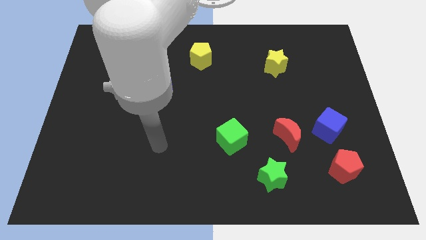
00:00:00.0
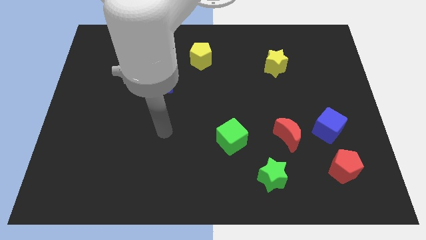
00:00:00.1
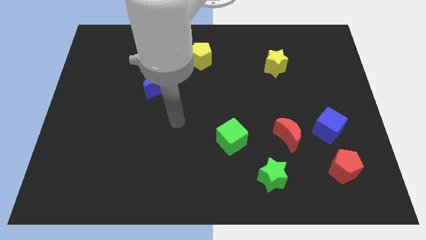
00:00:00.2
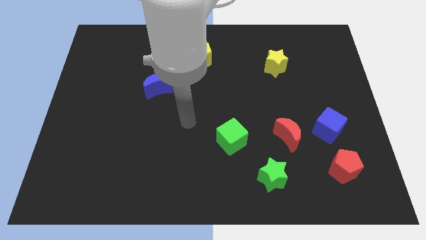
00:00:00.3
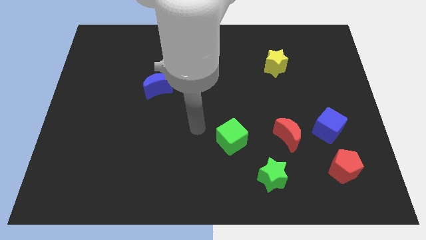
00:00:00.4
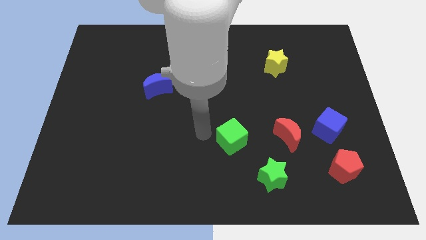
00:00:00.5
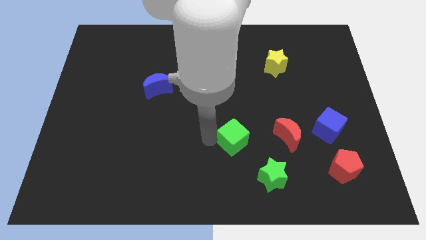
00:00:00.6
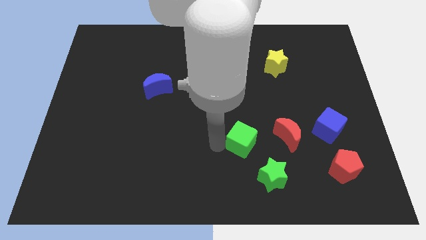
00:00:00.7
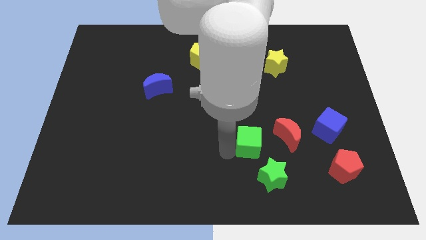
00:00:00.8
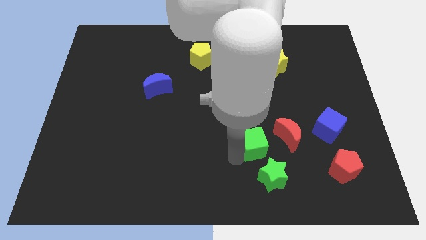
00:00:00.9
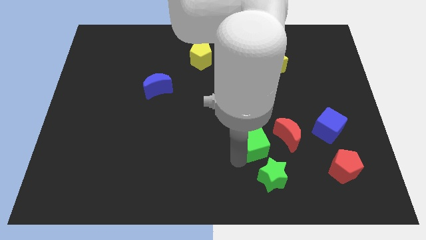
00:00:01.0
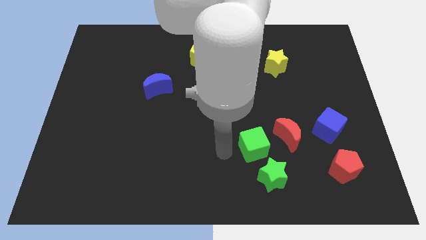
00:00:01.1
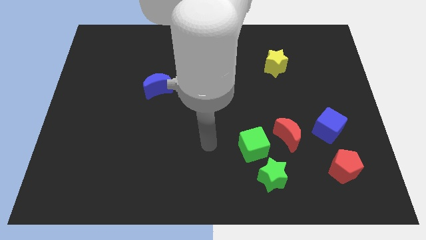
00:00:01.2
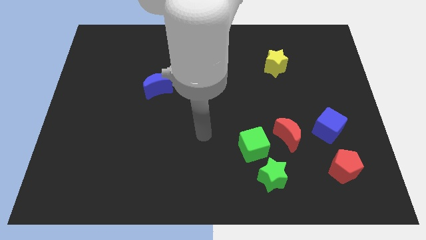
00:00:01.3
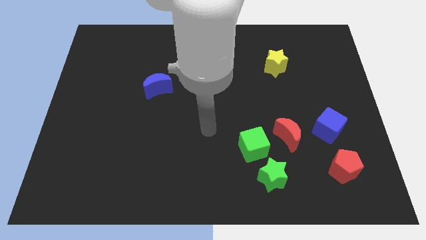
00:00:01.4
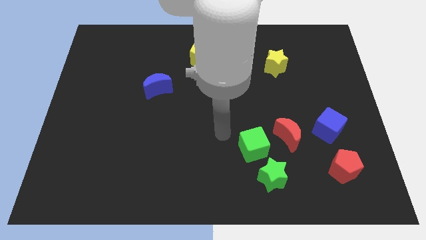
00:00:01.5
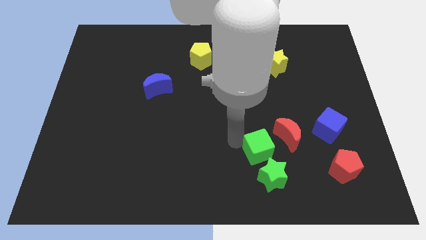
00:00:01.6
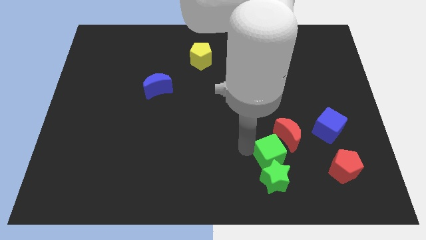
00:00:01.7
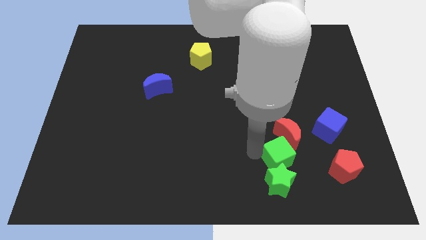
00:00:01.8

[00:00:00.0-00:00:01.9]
push the green cube close to the green star

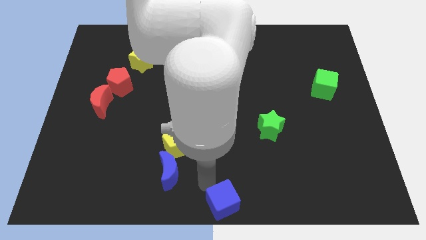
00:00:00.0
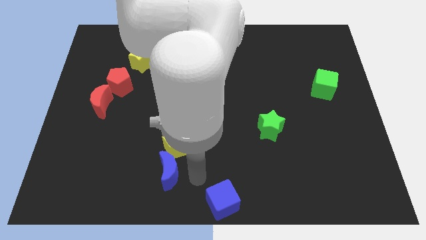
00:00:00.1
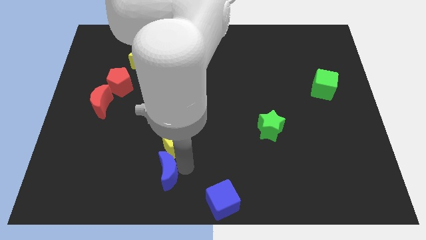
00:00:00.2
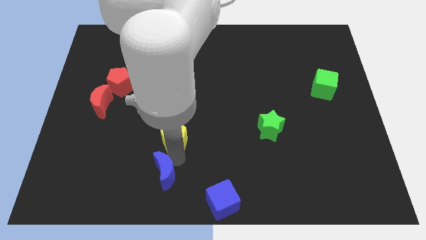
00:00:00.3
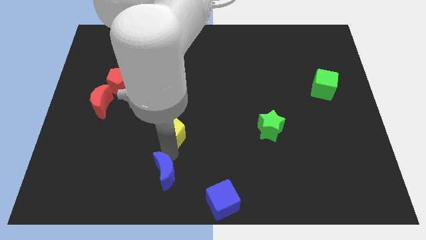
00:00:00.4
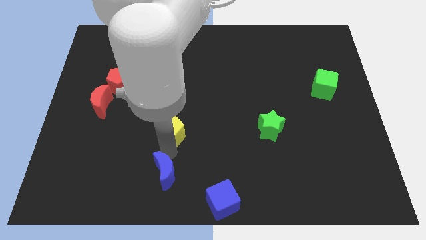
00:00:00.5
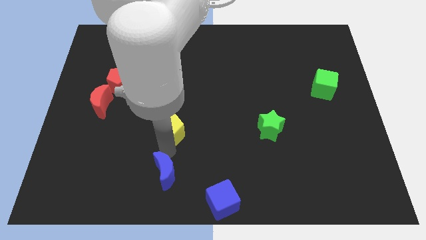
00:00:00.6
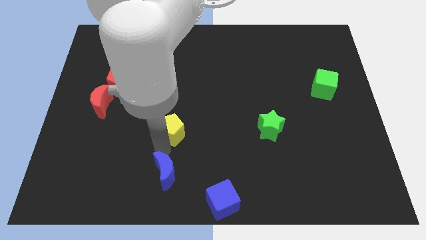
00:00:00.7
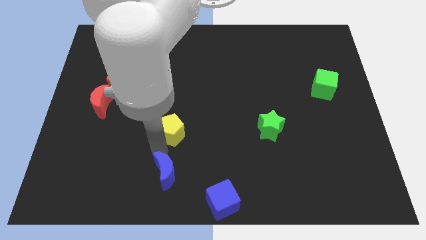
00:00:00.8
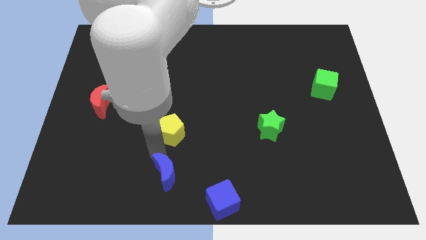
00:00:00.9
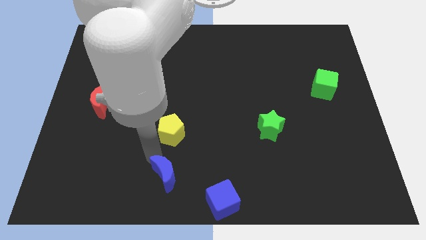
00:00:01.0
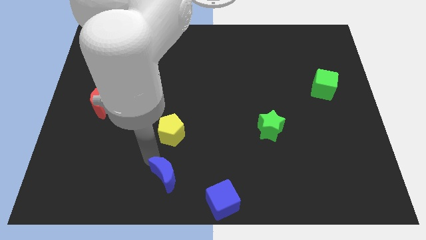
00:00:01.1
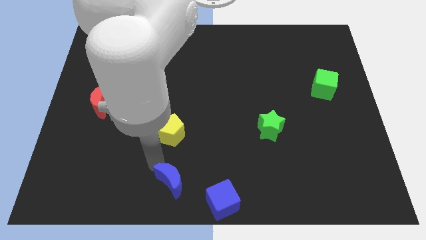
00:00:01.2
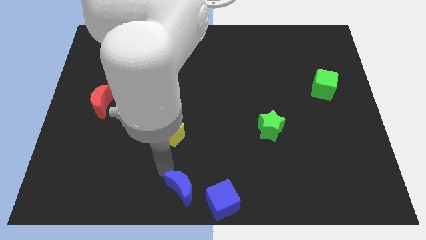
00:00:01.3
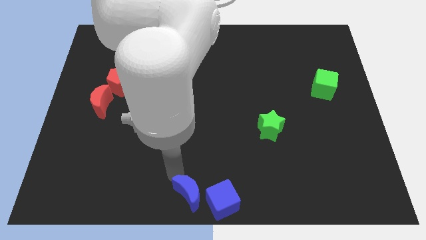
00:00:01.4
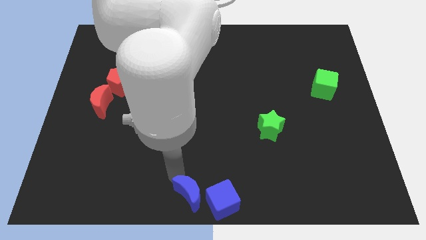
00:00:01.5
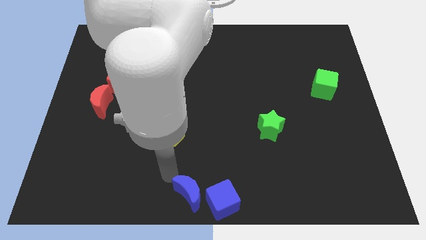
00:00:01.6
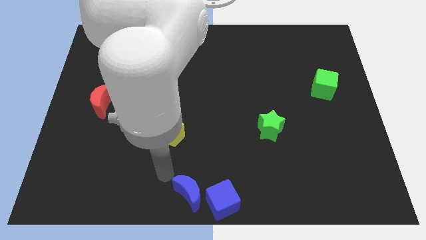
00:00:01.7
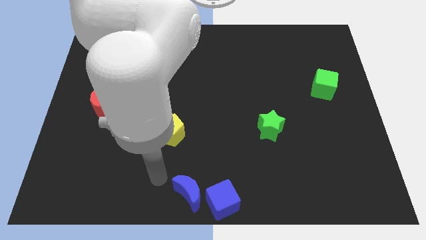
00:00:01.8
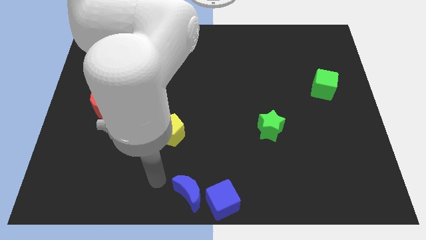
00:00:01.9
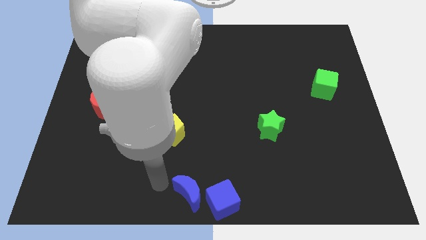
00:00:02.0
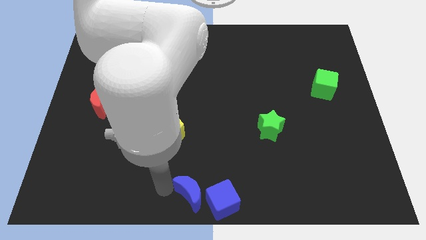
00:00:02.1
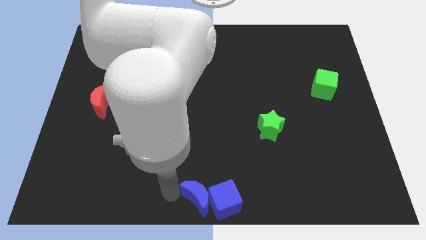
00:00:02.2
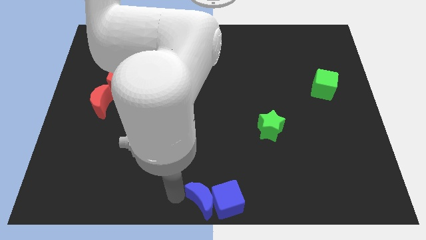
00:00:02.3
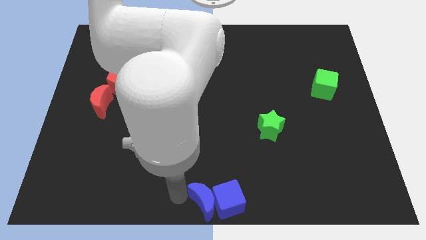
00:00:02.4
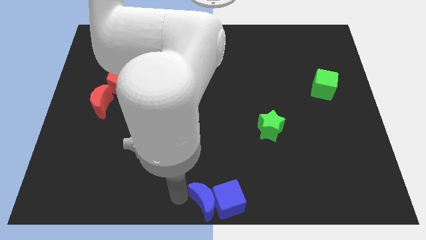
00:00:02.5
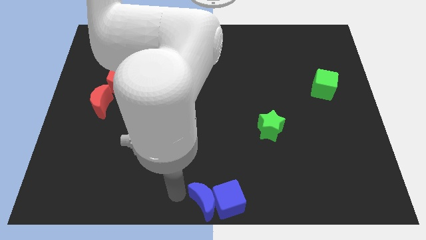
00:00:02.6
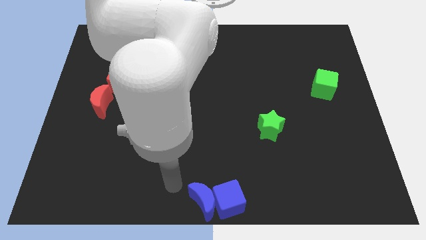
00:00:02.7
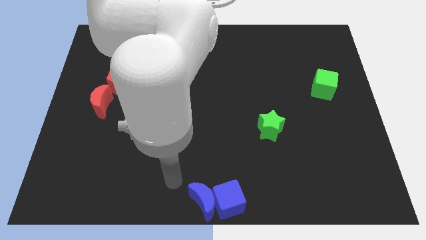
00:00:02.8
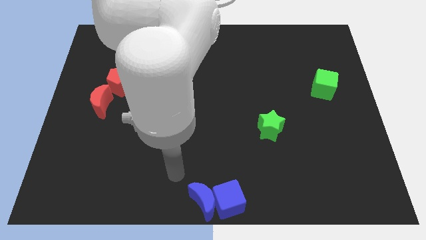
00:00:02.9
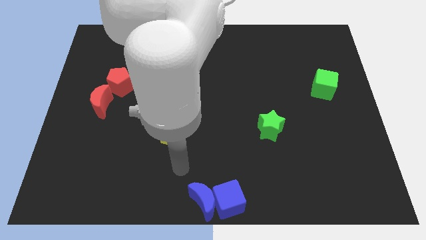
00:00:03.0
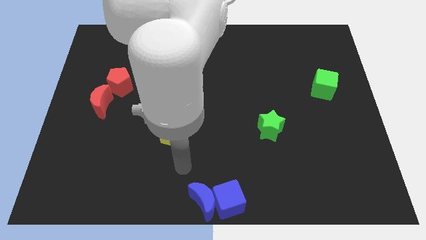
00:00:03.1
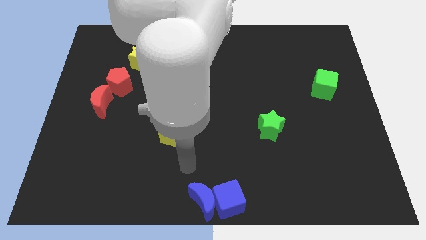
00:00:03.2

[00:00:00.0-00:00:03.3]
push the blue crescent left to the blue cube

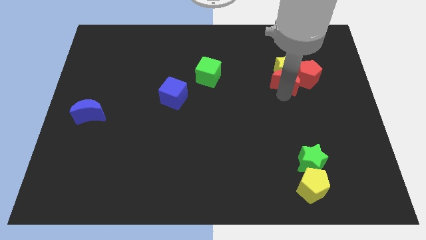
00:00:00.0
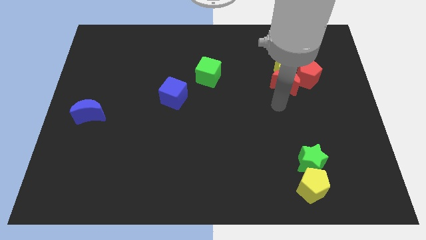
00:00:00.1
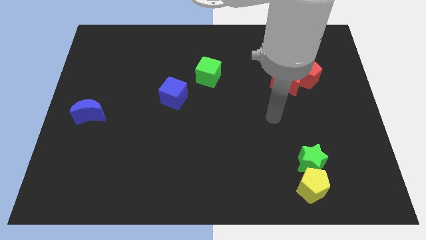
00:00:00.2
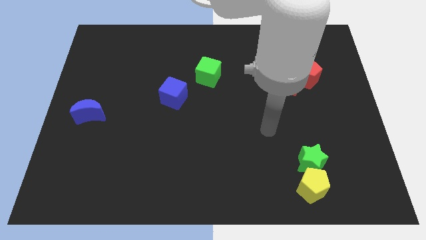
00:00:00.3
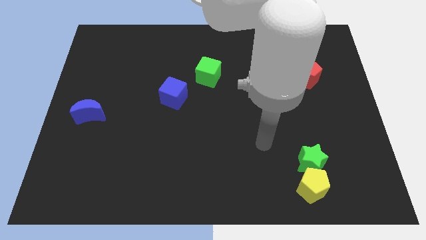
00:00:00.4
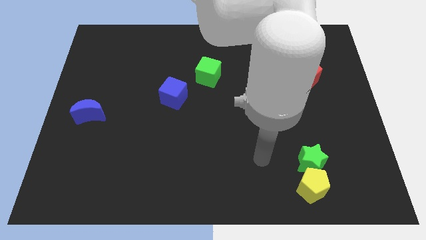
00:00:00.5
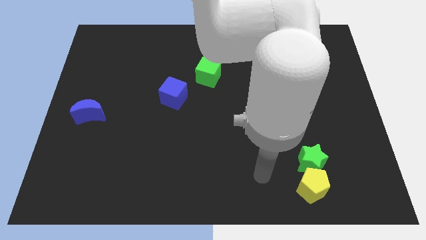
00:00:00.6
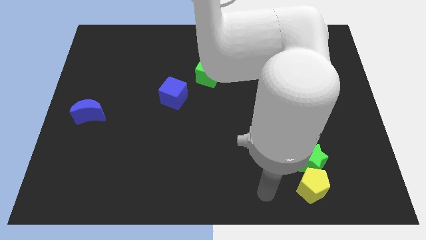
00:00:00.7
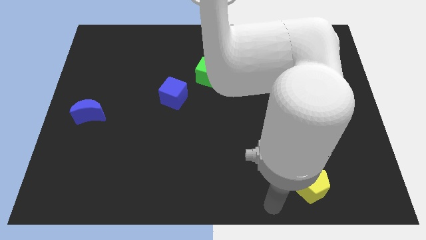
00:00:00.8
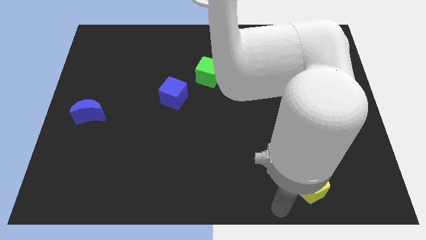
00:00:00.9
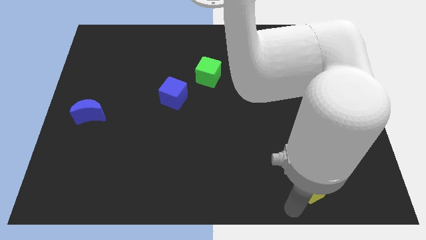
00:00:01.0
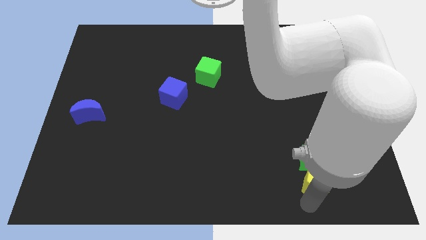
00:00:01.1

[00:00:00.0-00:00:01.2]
move your arm to the bottom of yellow pentagon

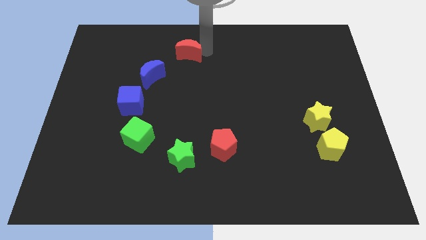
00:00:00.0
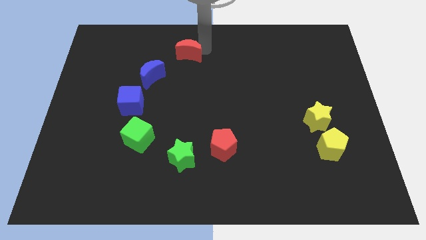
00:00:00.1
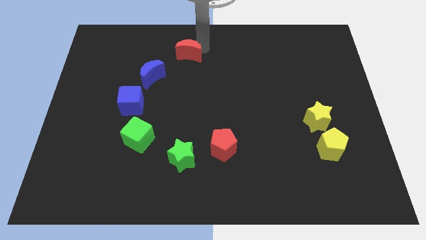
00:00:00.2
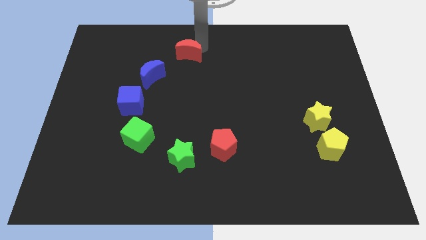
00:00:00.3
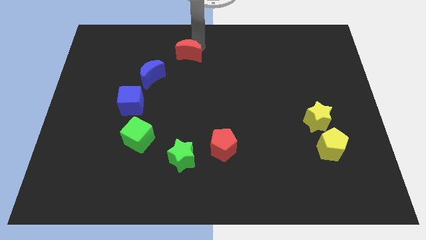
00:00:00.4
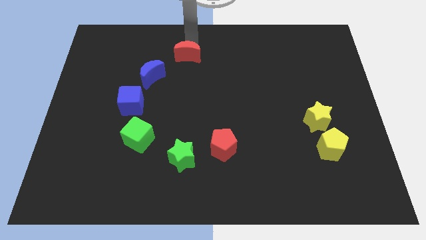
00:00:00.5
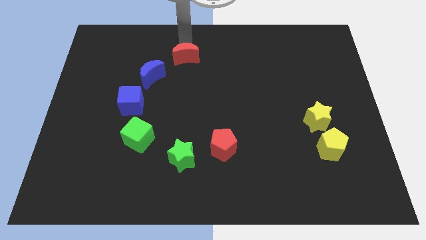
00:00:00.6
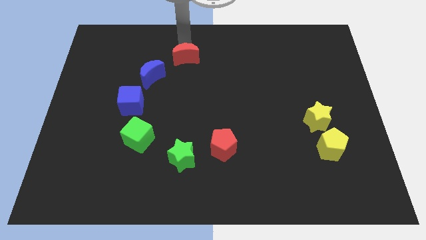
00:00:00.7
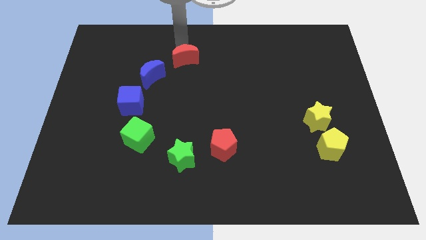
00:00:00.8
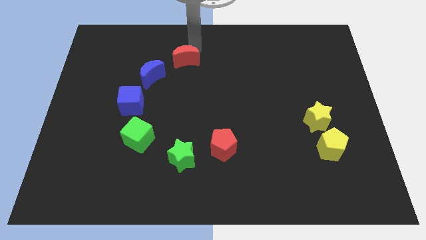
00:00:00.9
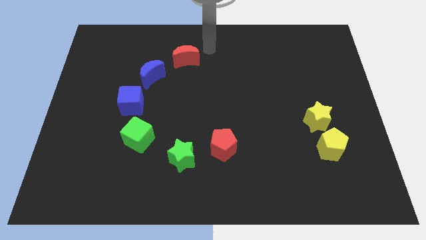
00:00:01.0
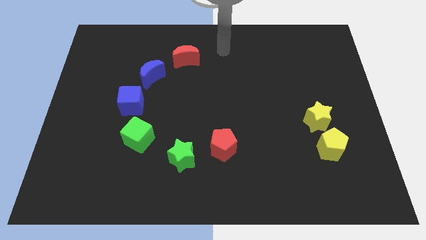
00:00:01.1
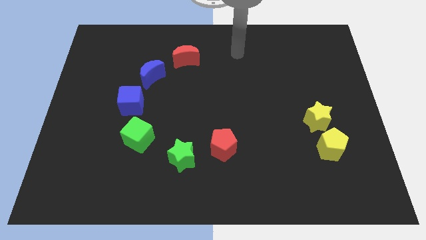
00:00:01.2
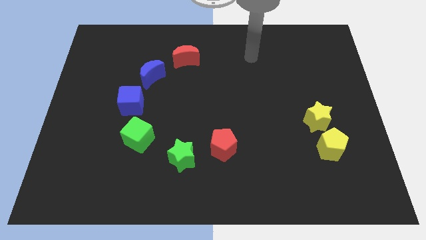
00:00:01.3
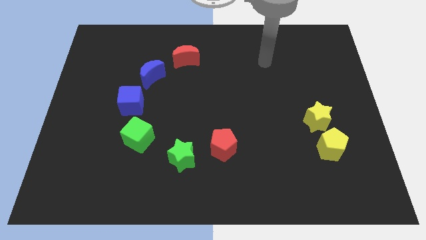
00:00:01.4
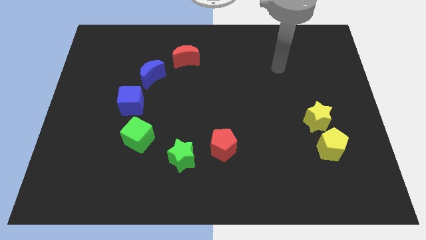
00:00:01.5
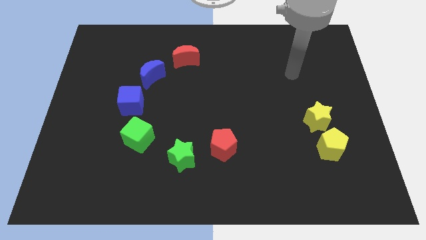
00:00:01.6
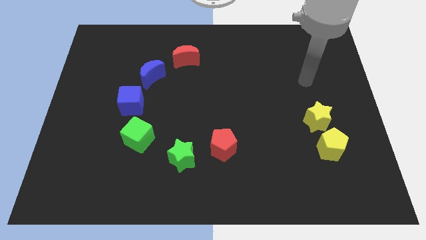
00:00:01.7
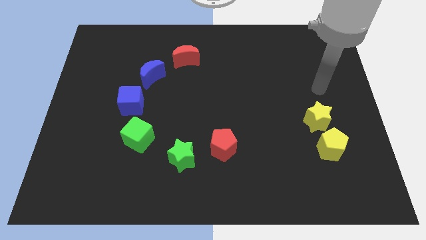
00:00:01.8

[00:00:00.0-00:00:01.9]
place the red crescent to the right of blue crescent

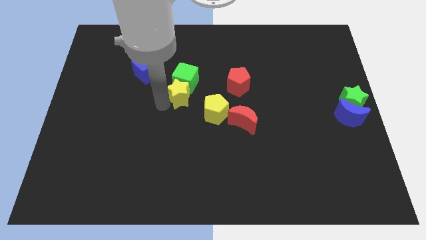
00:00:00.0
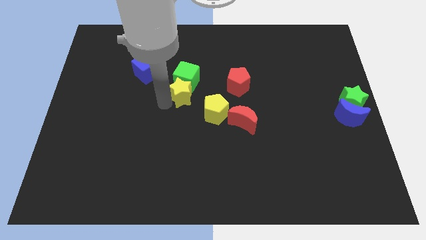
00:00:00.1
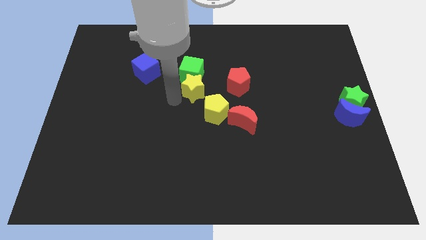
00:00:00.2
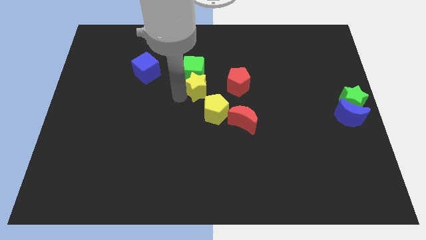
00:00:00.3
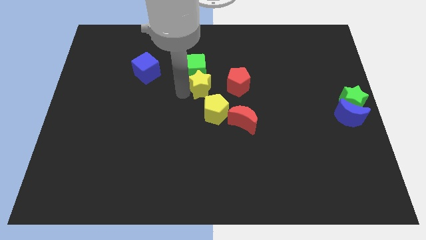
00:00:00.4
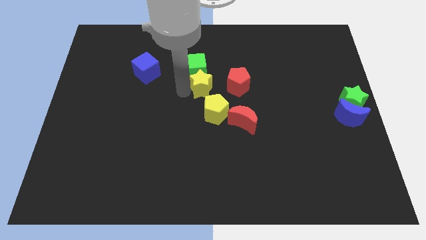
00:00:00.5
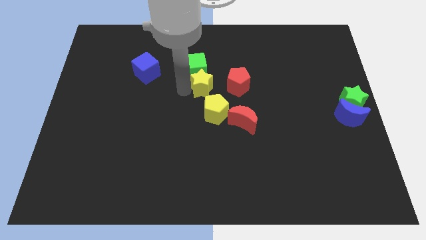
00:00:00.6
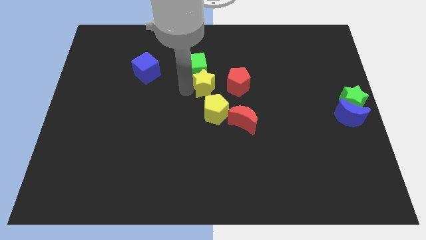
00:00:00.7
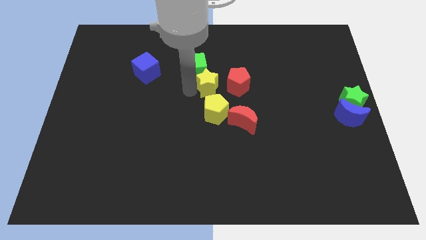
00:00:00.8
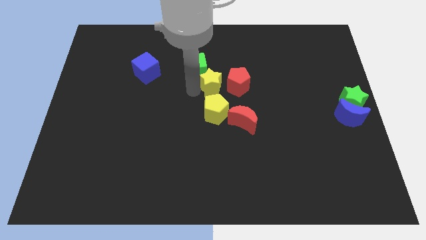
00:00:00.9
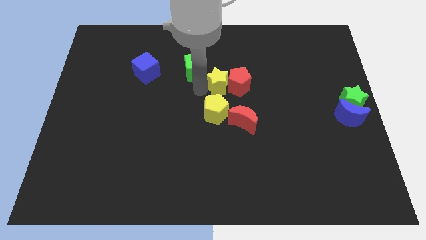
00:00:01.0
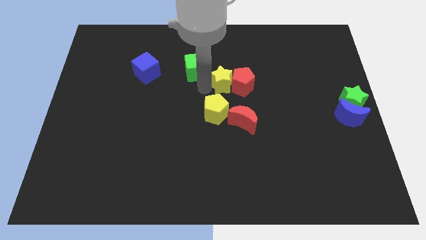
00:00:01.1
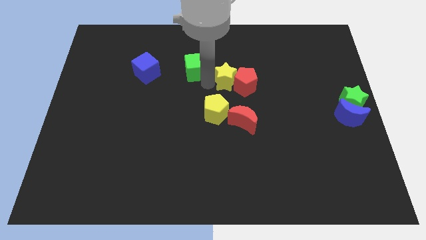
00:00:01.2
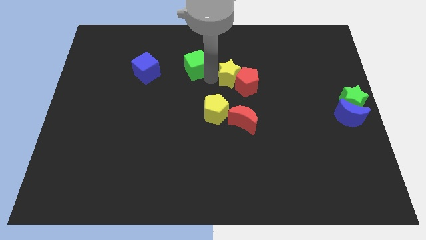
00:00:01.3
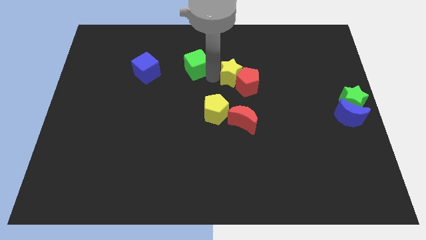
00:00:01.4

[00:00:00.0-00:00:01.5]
separate green cube and the yellow star
